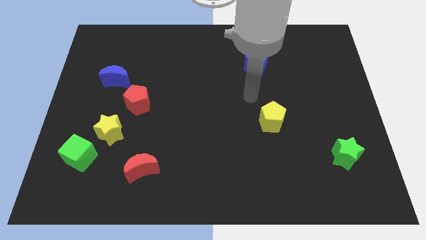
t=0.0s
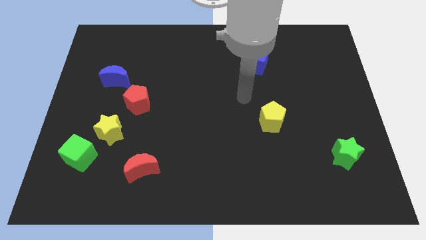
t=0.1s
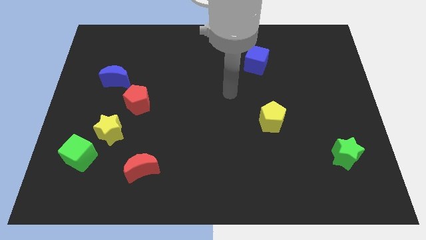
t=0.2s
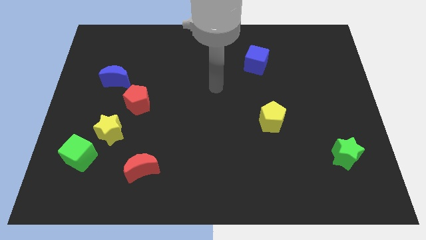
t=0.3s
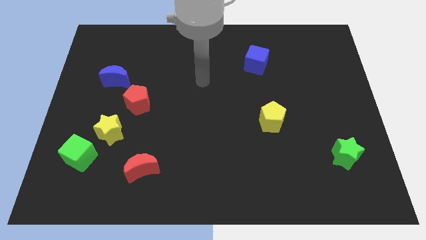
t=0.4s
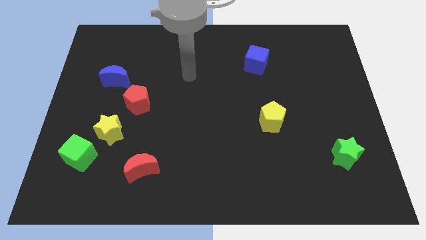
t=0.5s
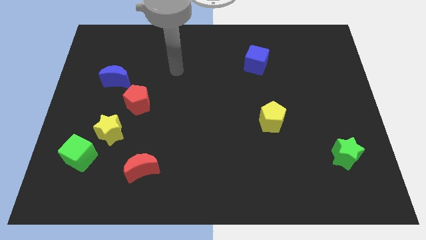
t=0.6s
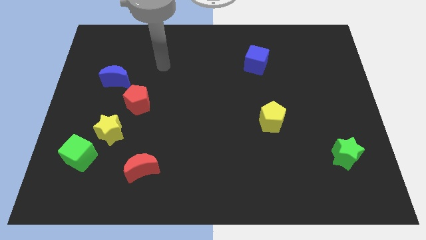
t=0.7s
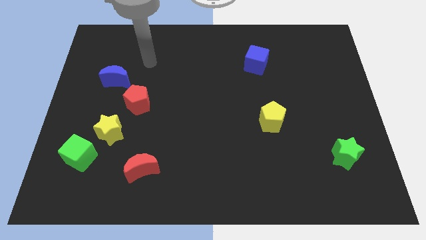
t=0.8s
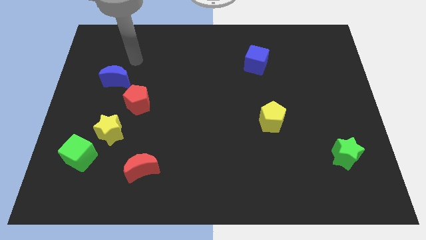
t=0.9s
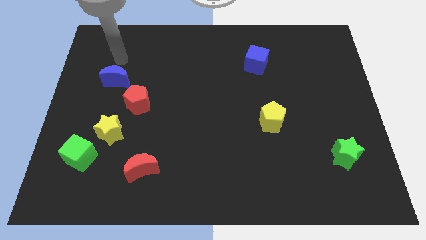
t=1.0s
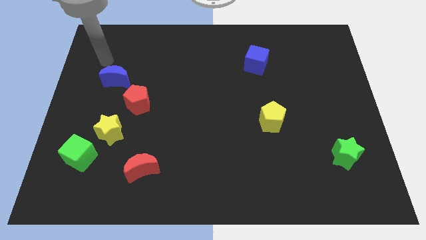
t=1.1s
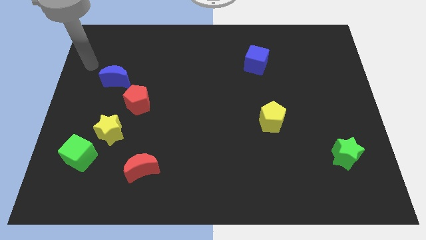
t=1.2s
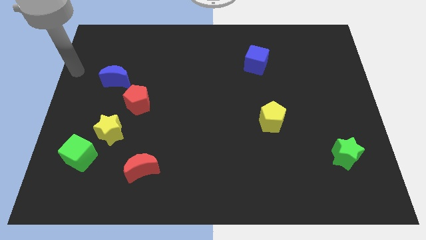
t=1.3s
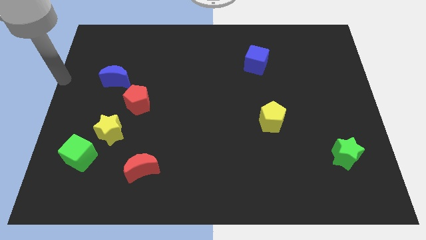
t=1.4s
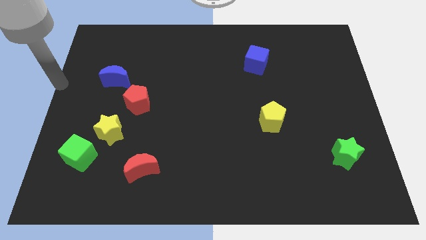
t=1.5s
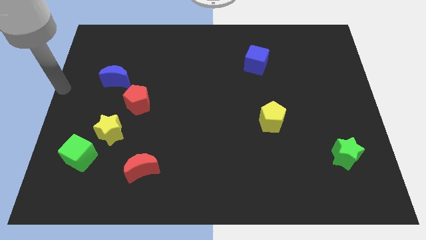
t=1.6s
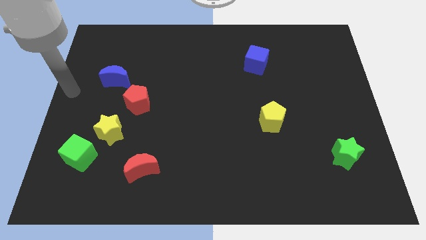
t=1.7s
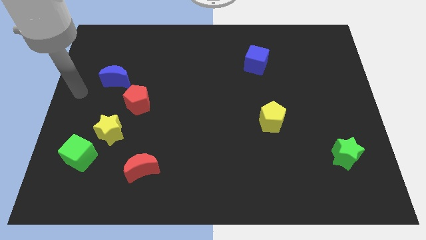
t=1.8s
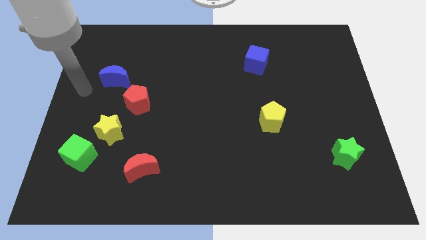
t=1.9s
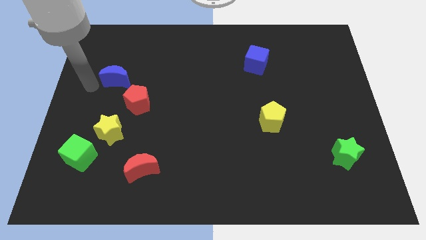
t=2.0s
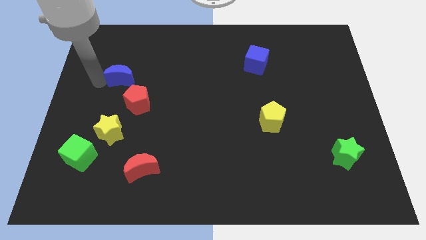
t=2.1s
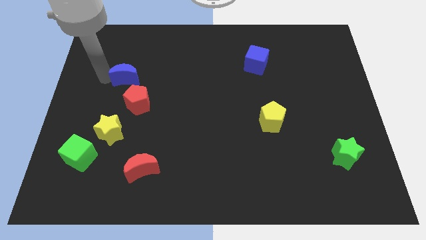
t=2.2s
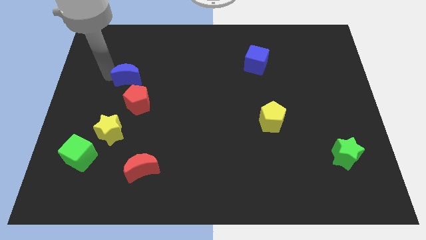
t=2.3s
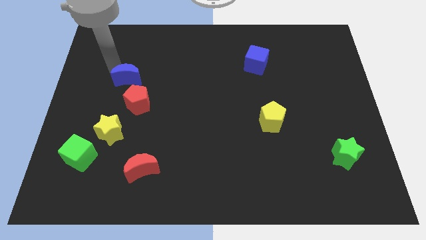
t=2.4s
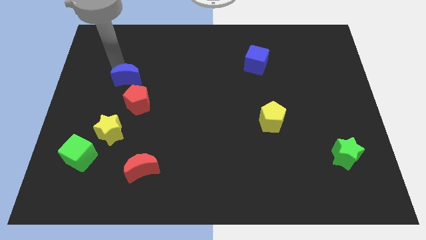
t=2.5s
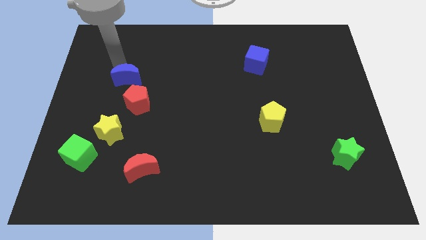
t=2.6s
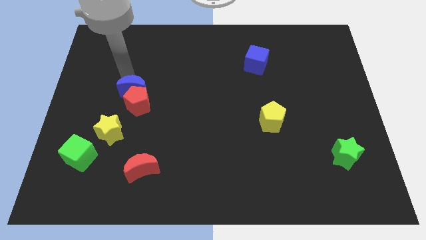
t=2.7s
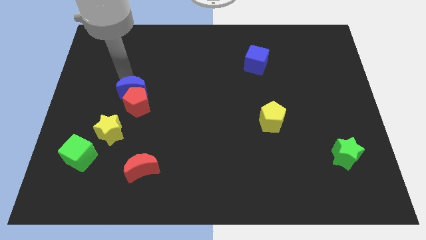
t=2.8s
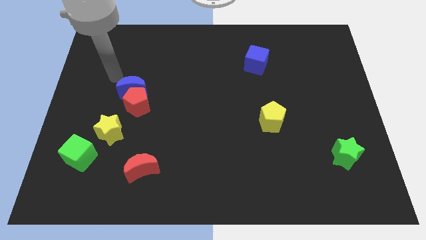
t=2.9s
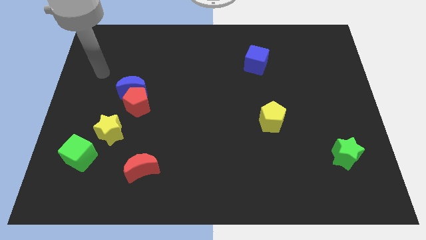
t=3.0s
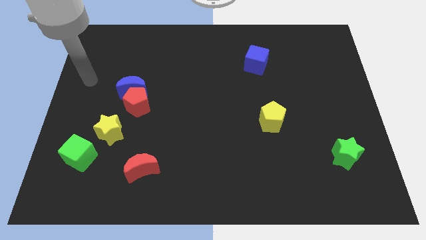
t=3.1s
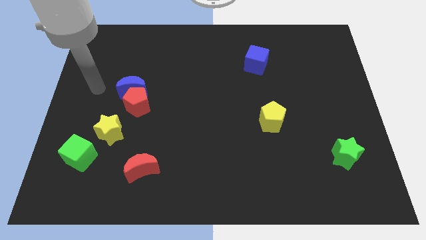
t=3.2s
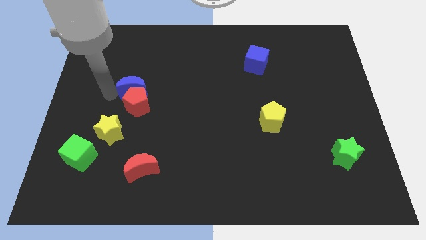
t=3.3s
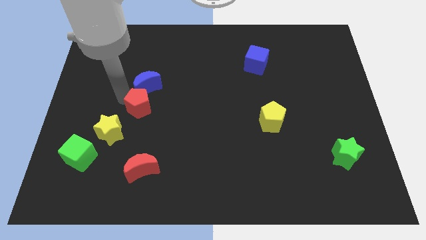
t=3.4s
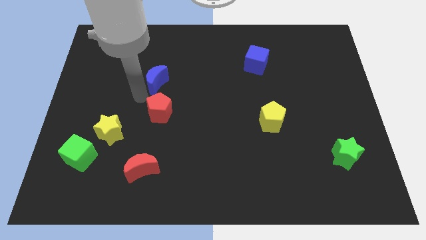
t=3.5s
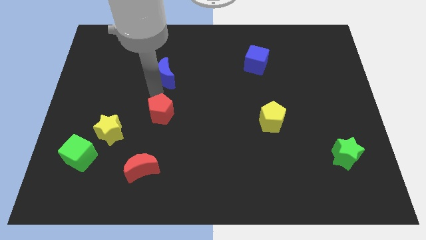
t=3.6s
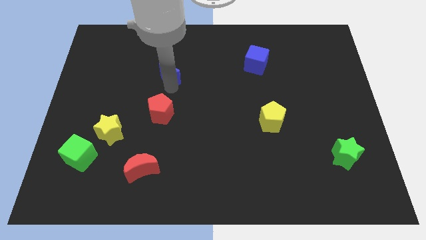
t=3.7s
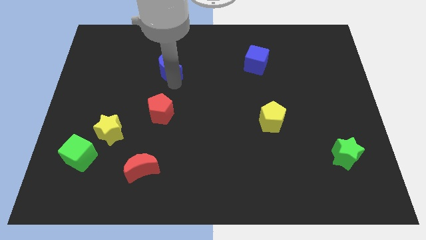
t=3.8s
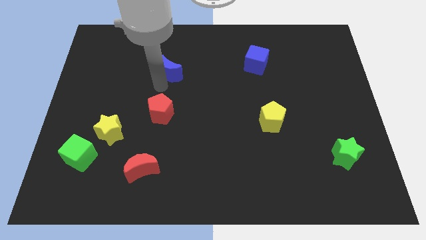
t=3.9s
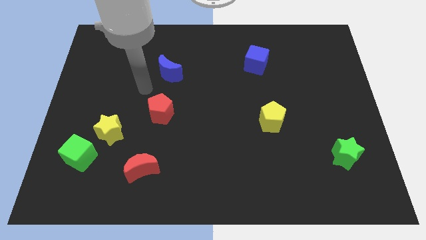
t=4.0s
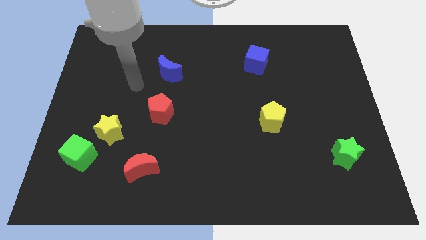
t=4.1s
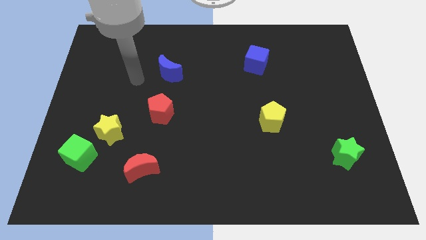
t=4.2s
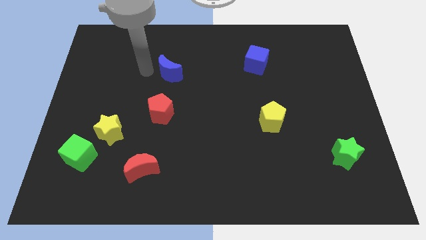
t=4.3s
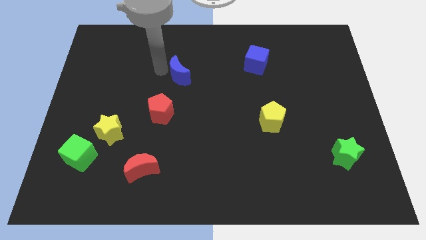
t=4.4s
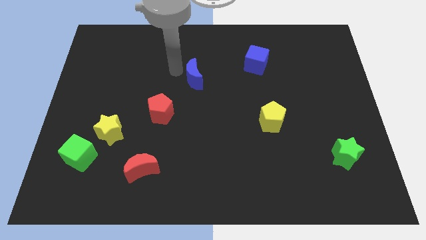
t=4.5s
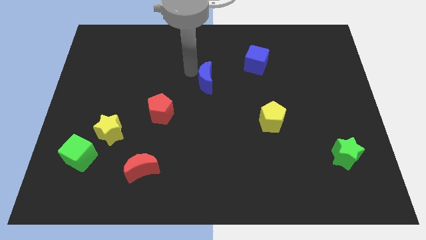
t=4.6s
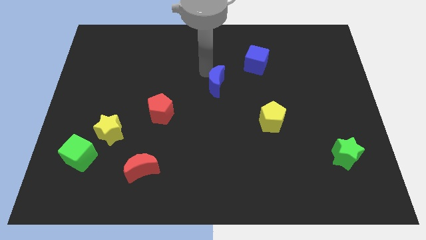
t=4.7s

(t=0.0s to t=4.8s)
move the blue crescent to the bottom left of the blue cube

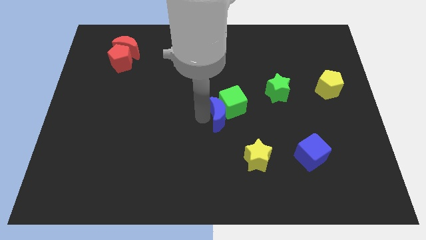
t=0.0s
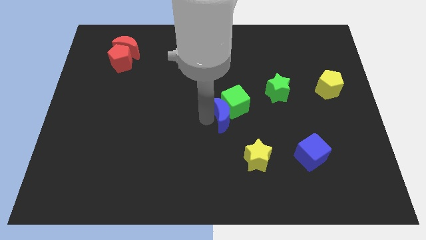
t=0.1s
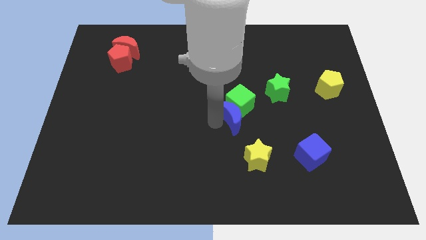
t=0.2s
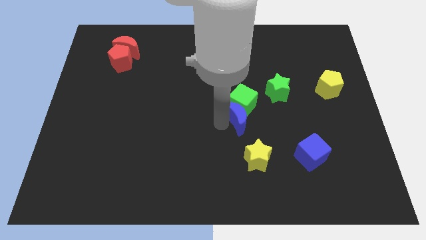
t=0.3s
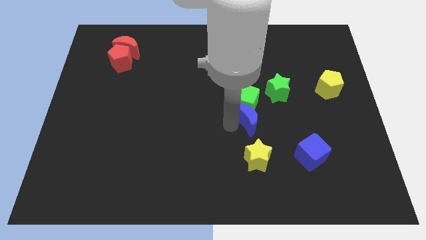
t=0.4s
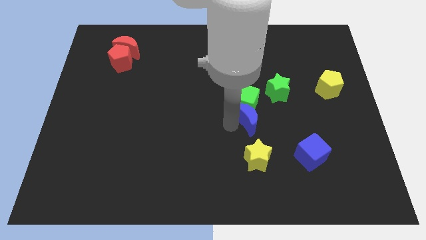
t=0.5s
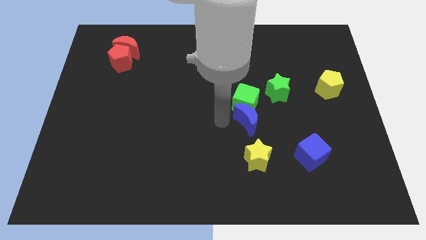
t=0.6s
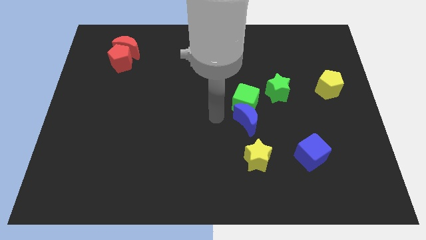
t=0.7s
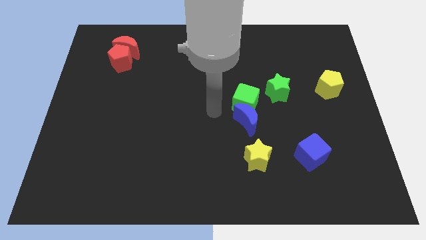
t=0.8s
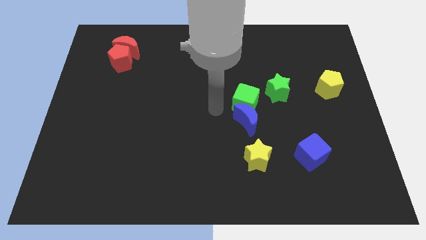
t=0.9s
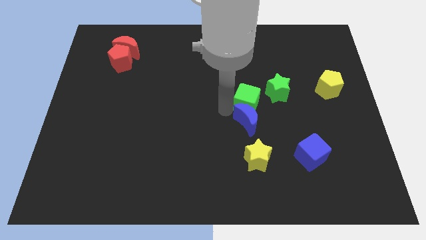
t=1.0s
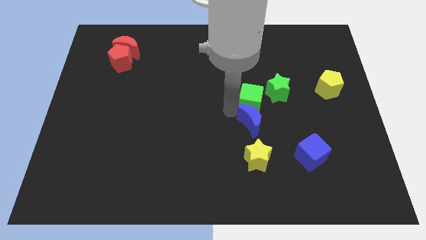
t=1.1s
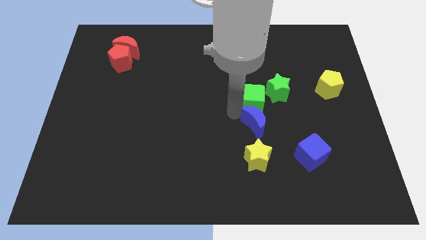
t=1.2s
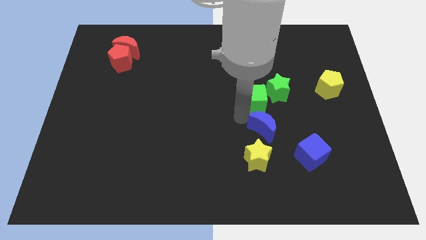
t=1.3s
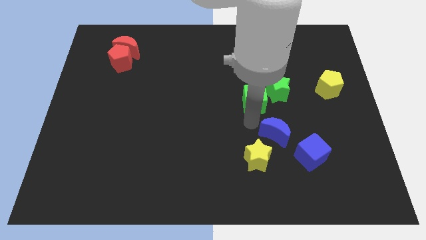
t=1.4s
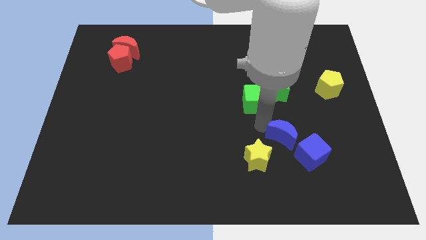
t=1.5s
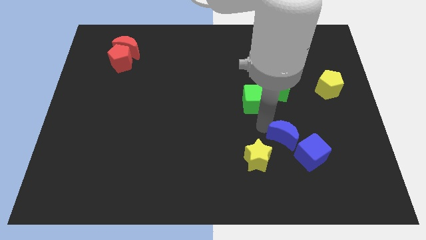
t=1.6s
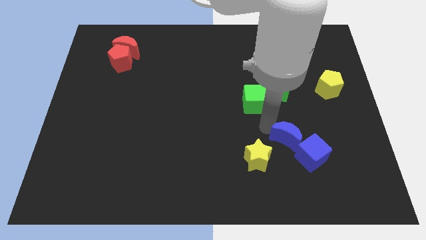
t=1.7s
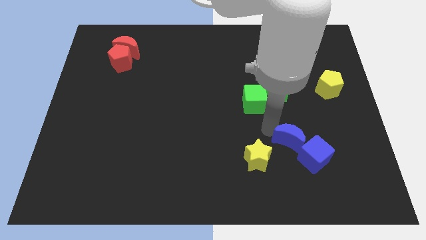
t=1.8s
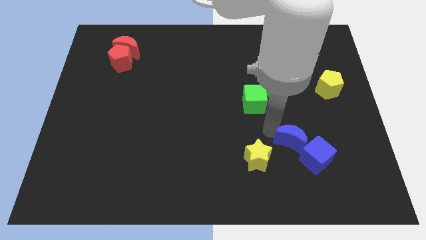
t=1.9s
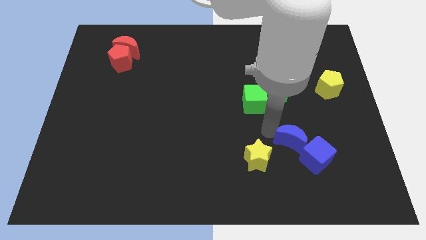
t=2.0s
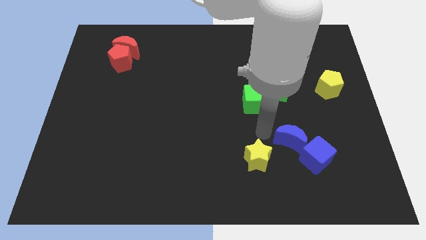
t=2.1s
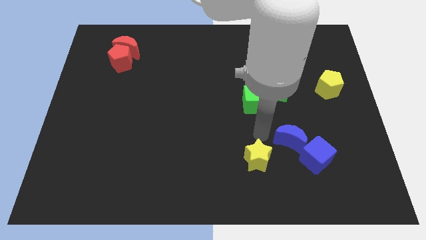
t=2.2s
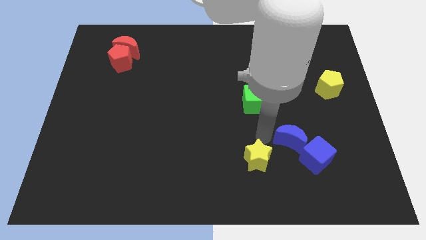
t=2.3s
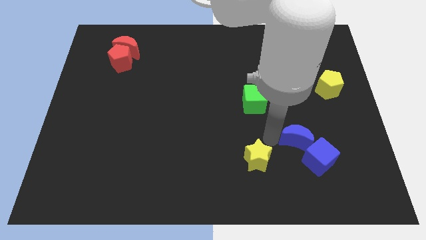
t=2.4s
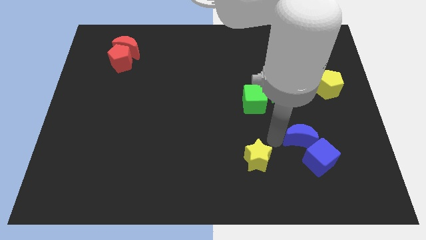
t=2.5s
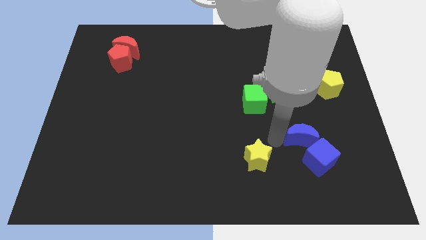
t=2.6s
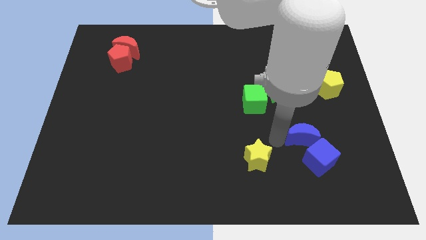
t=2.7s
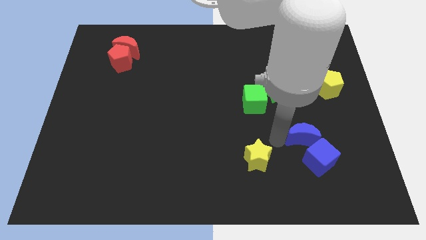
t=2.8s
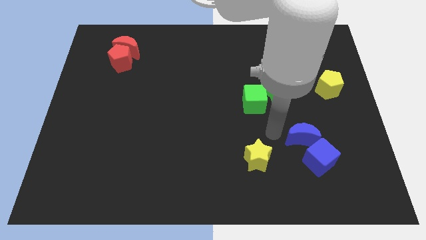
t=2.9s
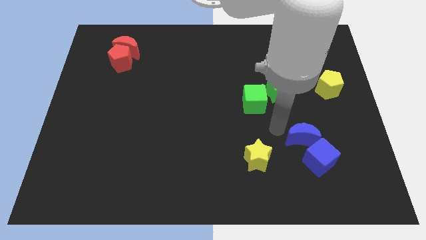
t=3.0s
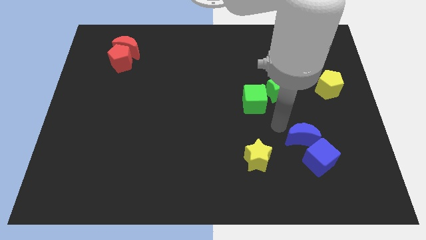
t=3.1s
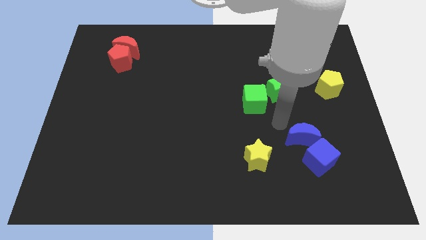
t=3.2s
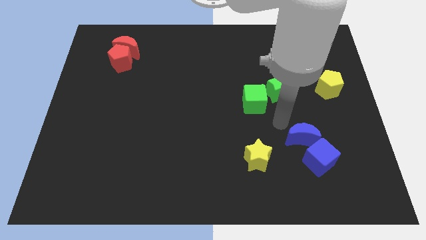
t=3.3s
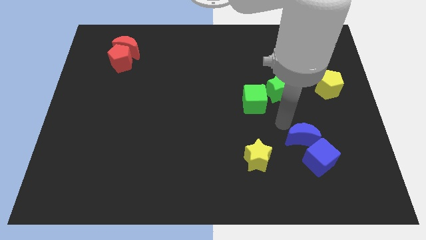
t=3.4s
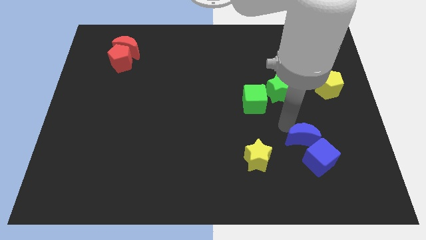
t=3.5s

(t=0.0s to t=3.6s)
push the blue moon into the blue cube

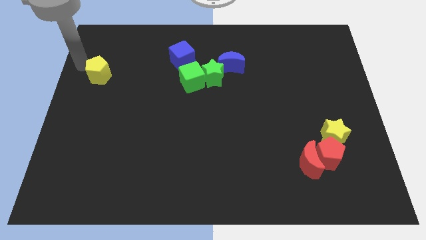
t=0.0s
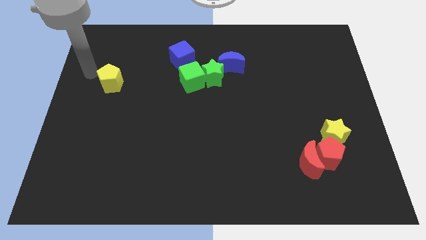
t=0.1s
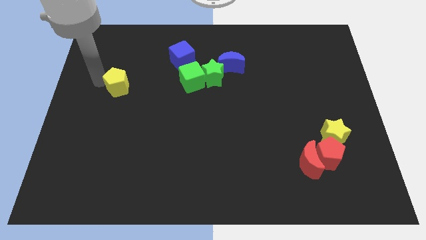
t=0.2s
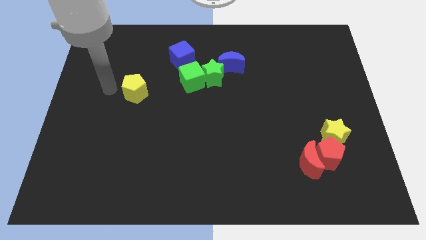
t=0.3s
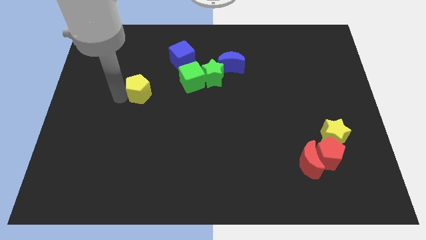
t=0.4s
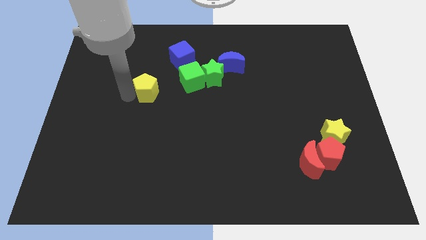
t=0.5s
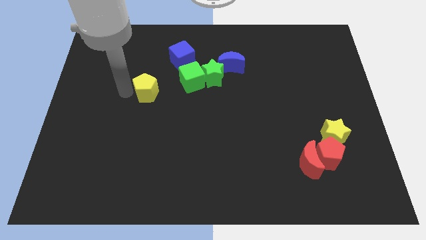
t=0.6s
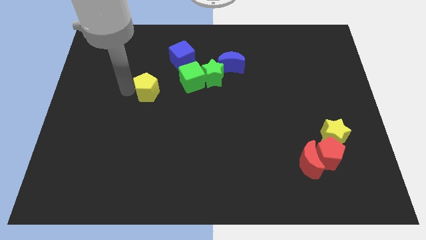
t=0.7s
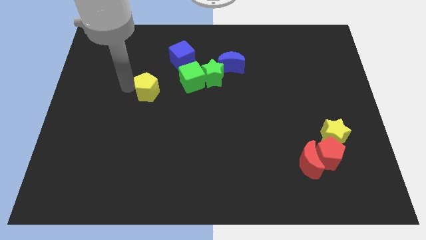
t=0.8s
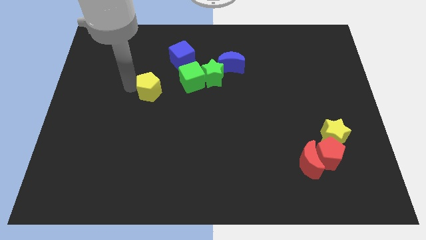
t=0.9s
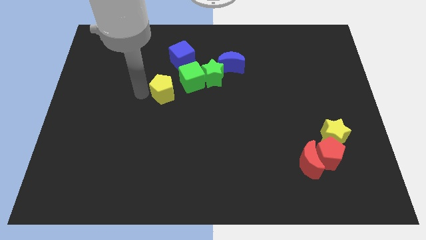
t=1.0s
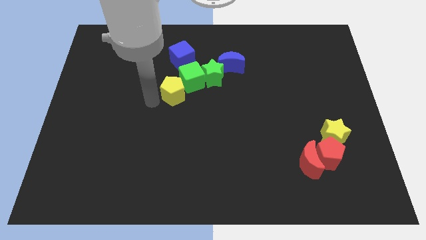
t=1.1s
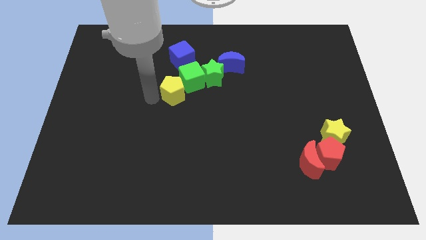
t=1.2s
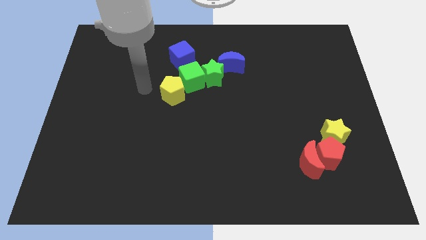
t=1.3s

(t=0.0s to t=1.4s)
push the yellow pentagon close to the green cube
